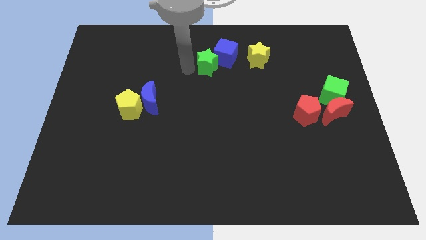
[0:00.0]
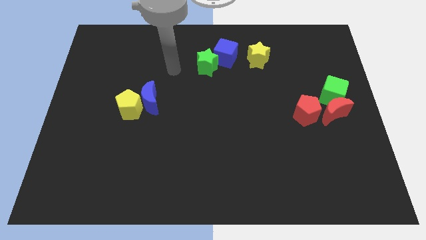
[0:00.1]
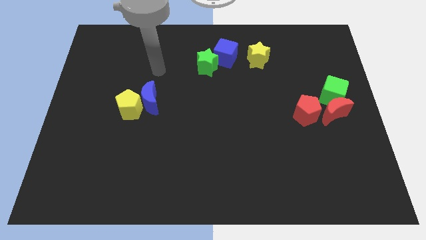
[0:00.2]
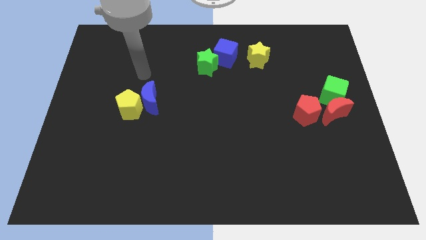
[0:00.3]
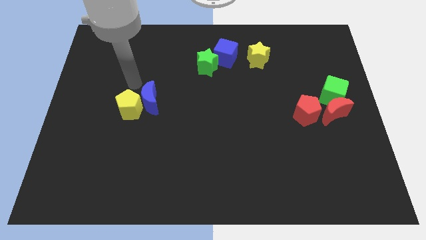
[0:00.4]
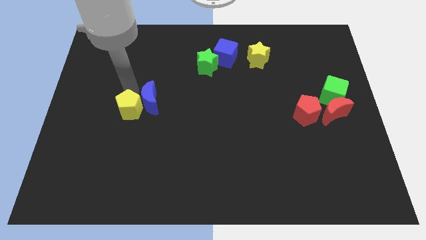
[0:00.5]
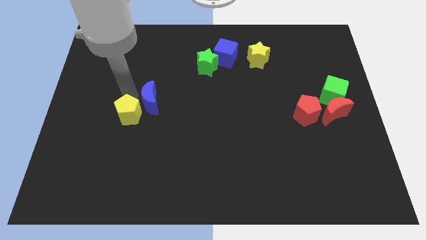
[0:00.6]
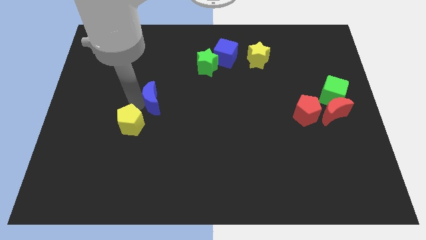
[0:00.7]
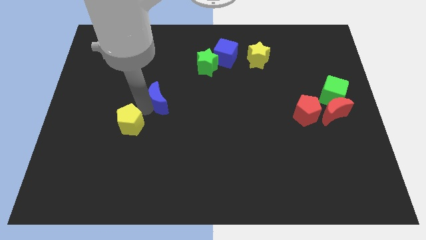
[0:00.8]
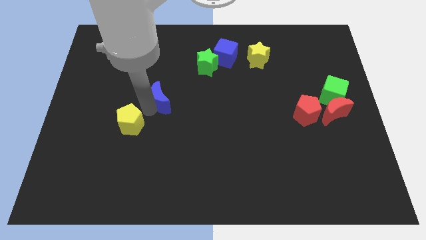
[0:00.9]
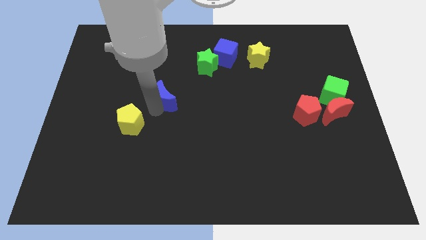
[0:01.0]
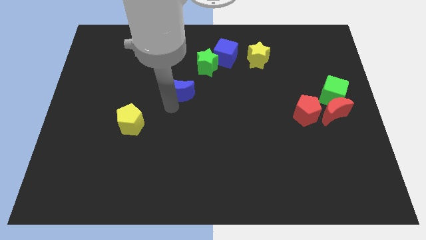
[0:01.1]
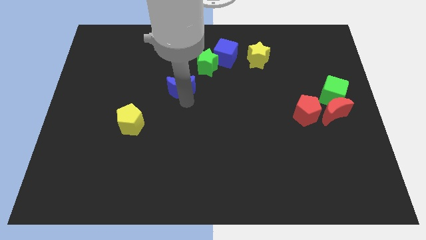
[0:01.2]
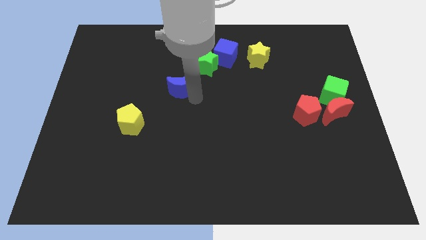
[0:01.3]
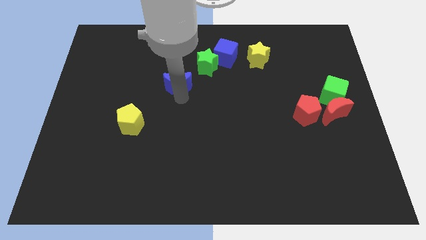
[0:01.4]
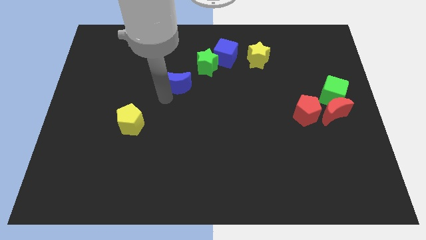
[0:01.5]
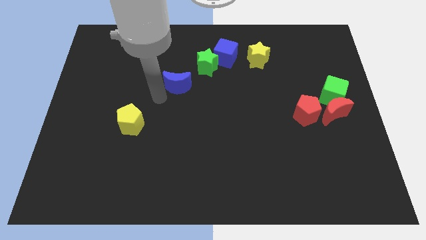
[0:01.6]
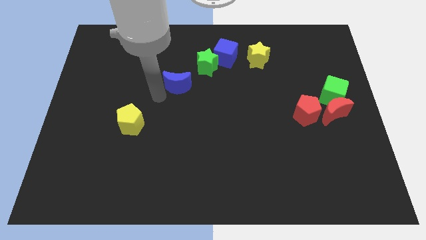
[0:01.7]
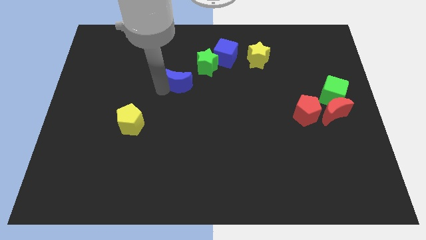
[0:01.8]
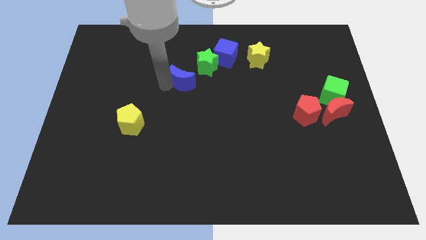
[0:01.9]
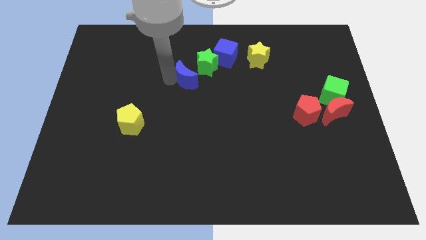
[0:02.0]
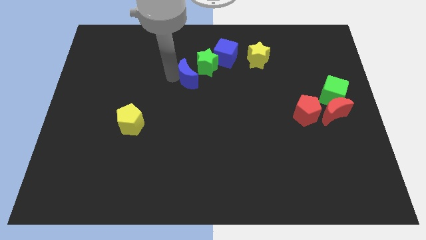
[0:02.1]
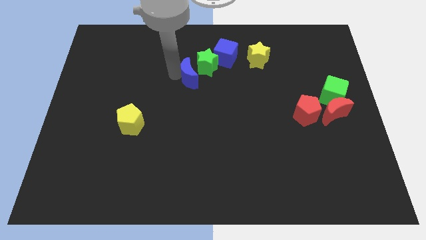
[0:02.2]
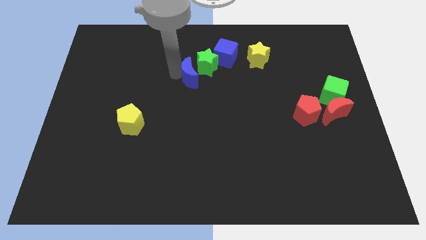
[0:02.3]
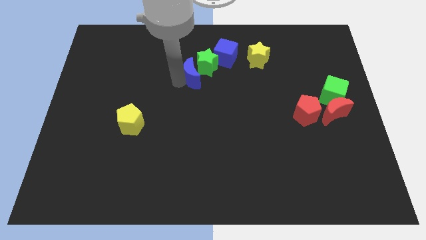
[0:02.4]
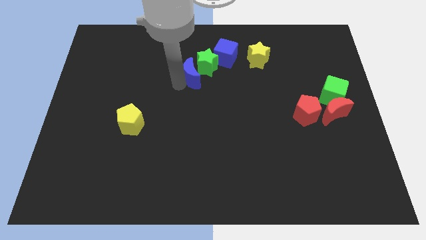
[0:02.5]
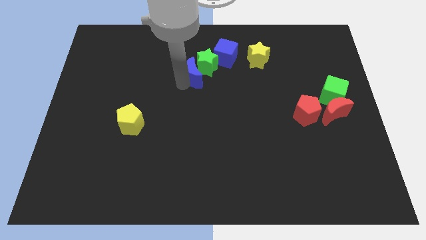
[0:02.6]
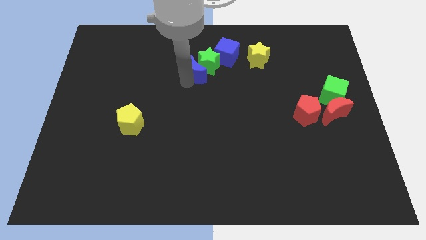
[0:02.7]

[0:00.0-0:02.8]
separate blue moon from the yellow pentagon

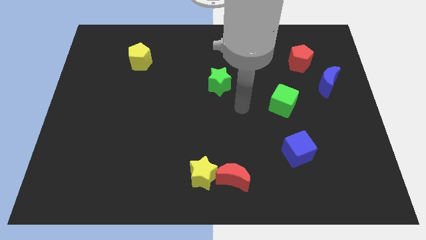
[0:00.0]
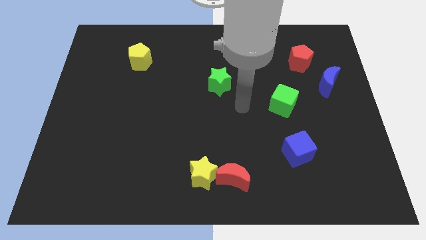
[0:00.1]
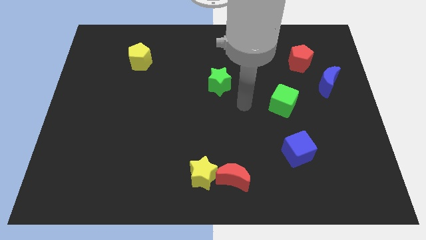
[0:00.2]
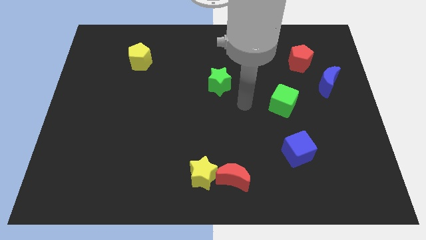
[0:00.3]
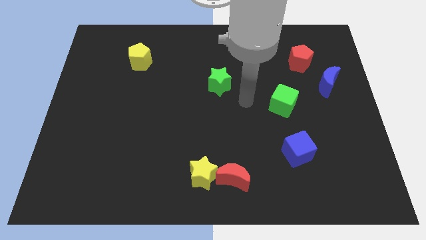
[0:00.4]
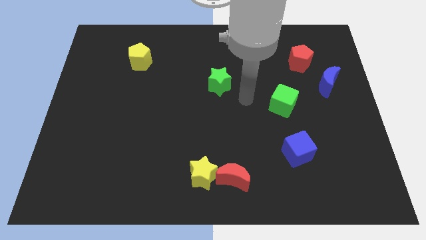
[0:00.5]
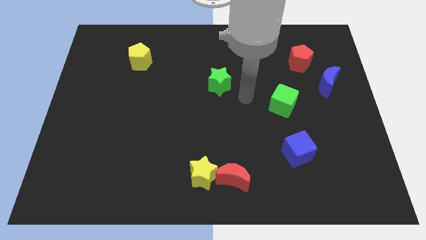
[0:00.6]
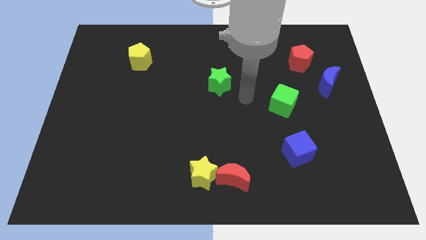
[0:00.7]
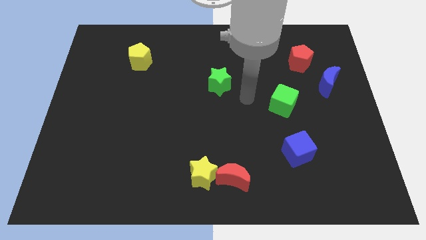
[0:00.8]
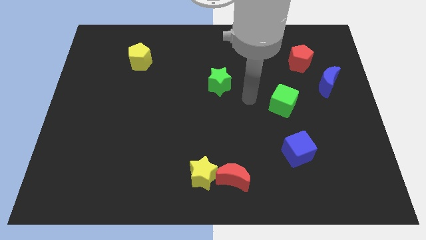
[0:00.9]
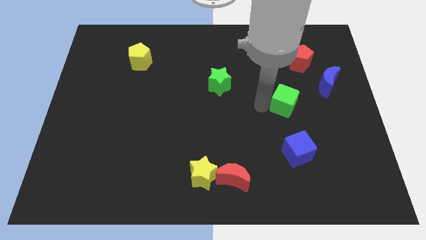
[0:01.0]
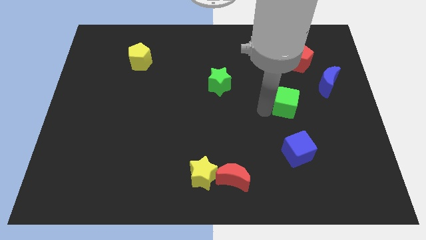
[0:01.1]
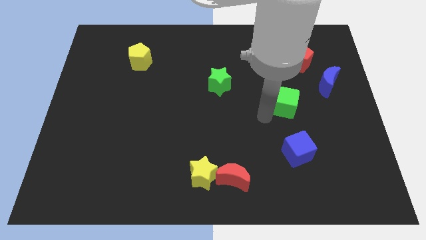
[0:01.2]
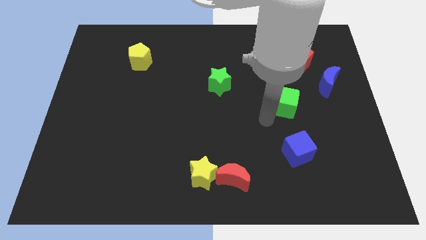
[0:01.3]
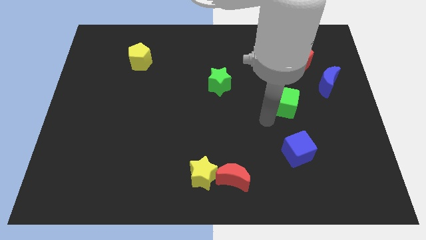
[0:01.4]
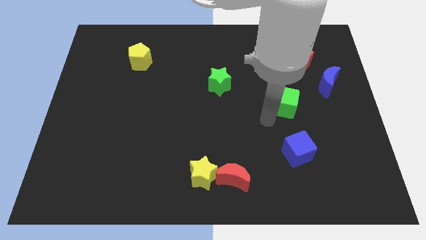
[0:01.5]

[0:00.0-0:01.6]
move the green cube slightly to the right

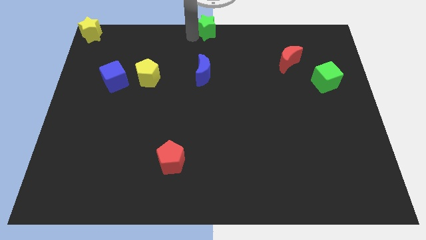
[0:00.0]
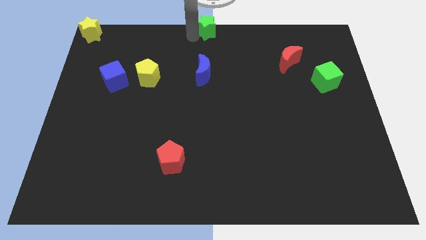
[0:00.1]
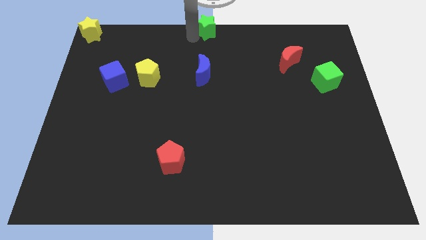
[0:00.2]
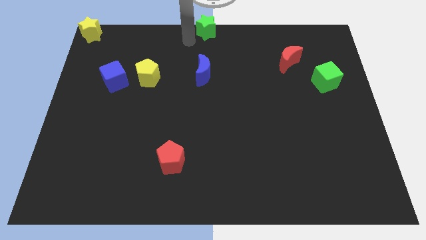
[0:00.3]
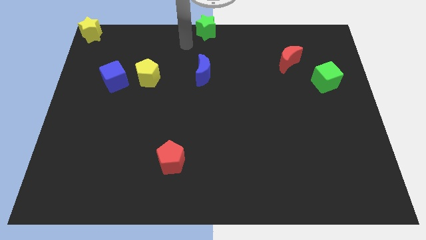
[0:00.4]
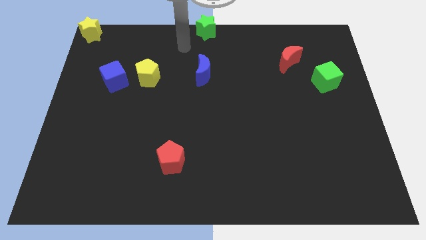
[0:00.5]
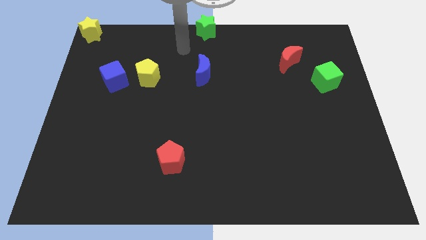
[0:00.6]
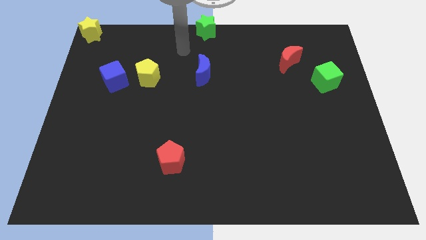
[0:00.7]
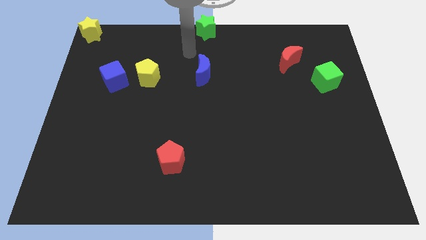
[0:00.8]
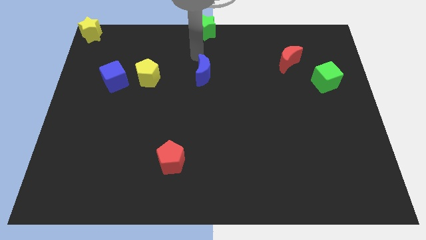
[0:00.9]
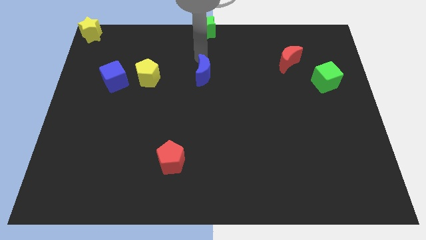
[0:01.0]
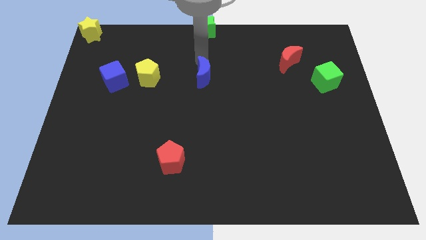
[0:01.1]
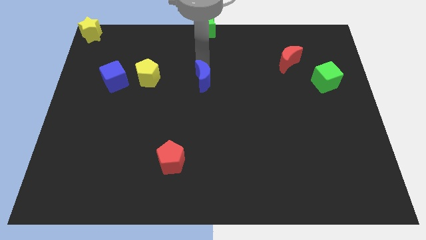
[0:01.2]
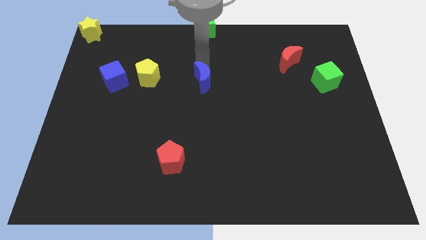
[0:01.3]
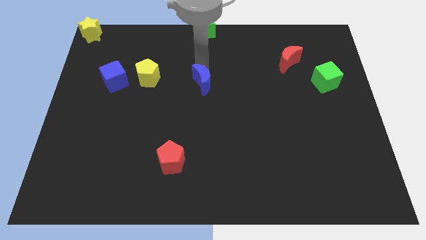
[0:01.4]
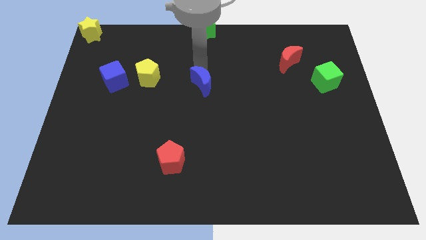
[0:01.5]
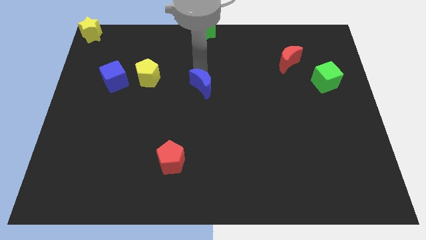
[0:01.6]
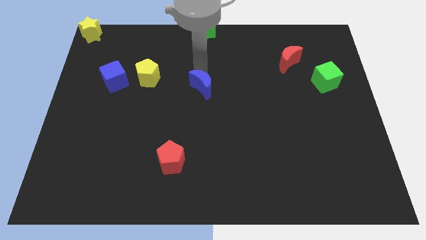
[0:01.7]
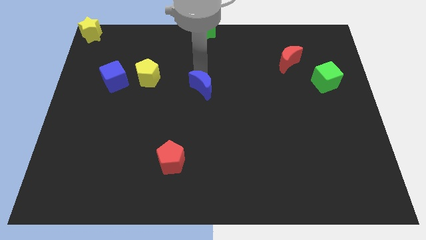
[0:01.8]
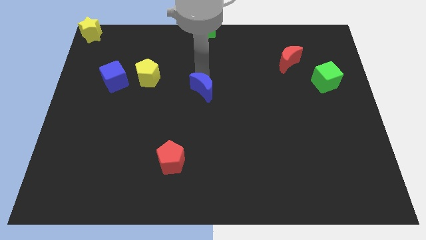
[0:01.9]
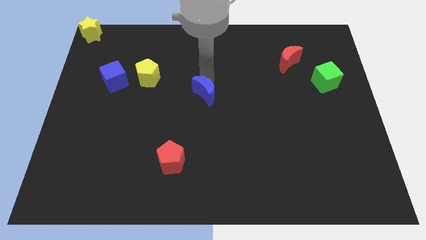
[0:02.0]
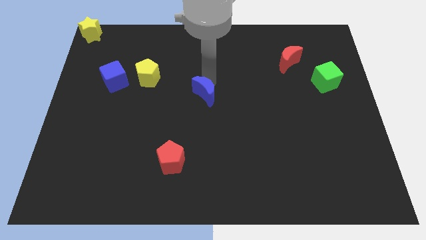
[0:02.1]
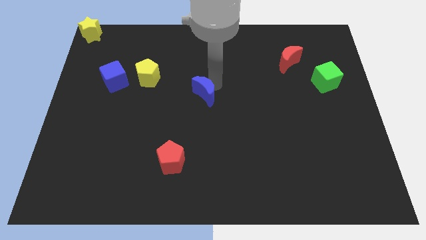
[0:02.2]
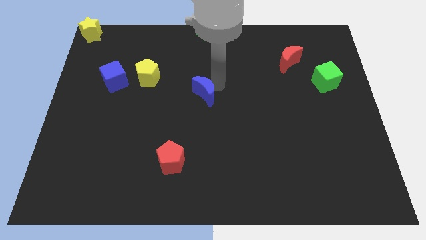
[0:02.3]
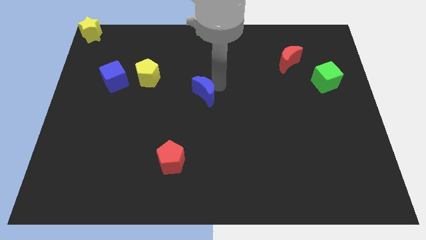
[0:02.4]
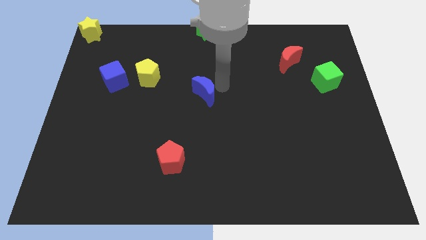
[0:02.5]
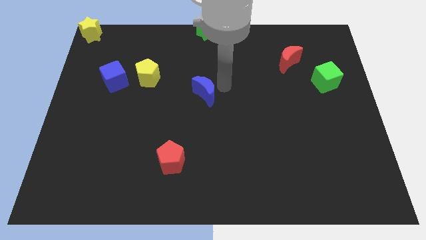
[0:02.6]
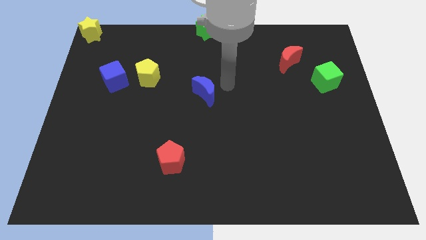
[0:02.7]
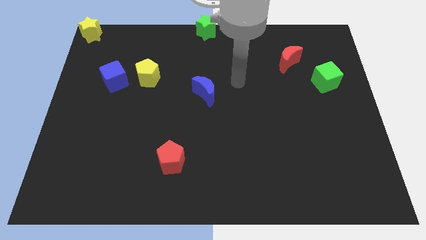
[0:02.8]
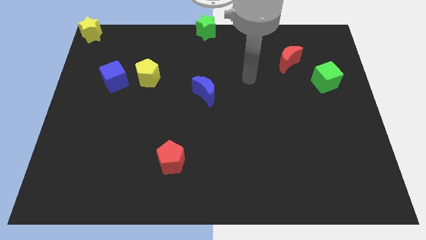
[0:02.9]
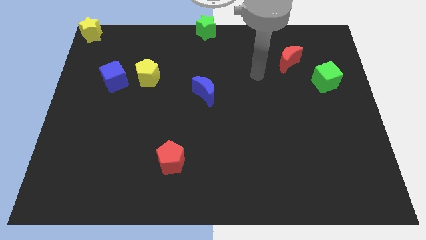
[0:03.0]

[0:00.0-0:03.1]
slide blue moon down a bit

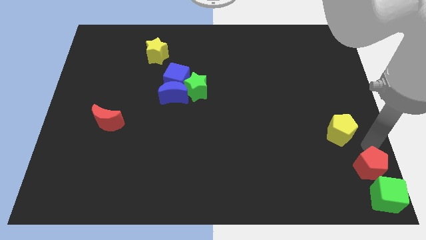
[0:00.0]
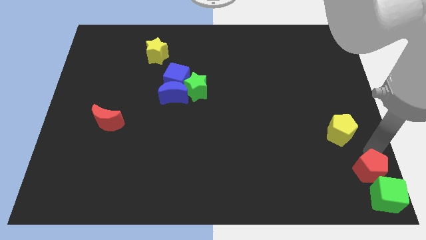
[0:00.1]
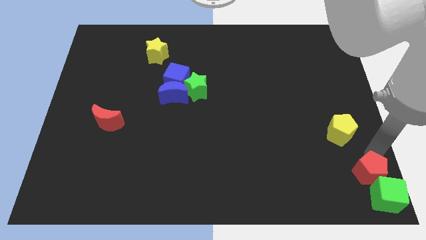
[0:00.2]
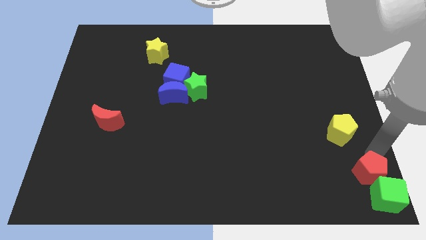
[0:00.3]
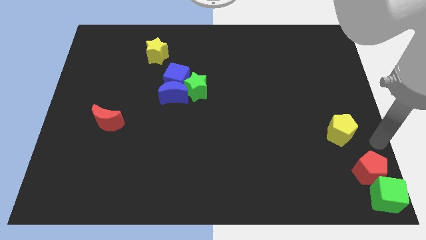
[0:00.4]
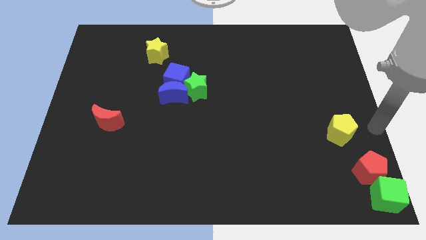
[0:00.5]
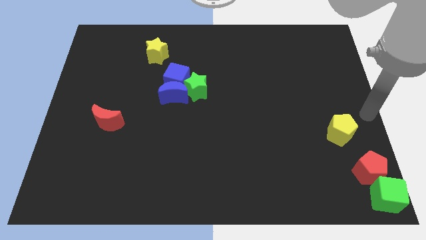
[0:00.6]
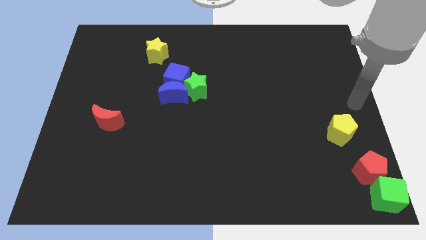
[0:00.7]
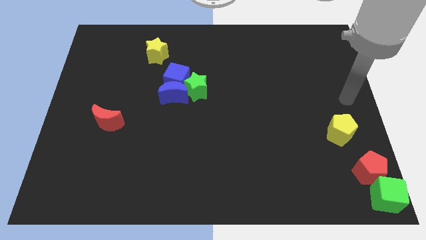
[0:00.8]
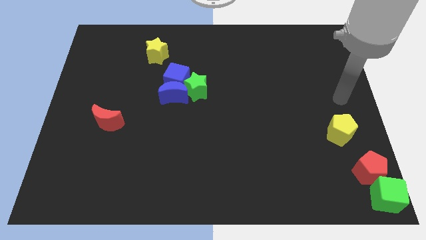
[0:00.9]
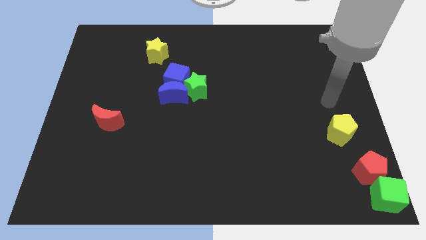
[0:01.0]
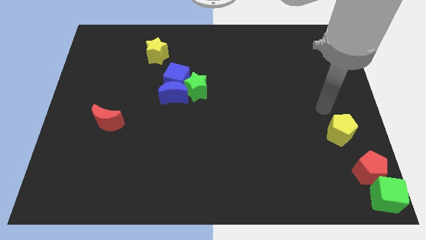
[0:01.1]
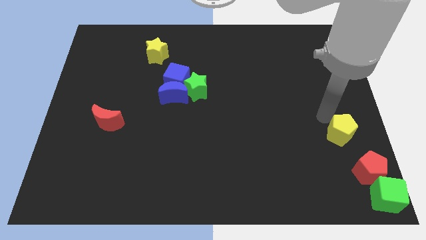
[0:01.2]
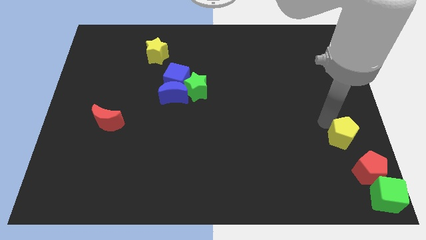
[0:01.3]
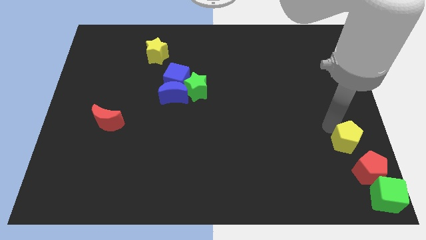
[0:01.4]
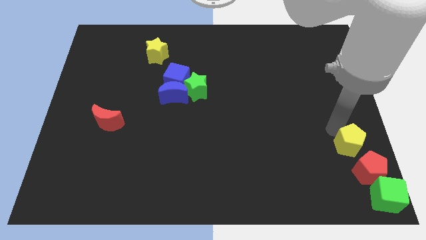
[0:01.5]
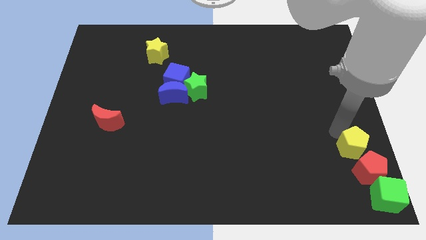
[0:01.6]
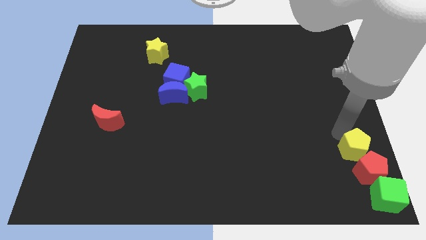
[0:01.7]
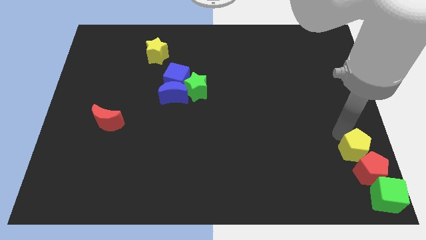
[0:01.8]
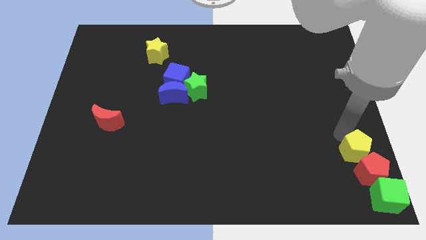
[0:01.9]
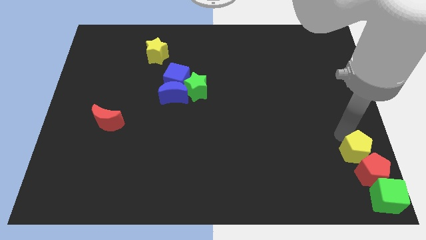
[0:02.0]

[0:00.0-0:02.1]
push the red pentagon and the yellow pentagon into the green cube
